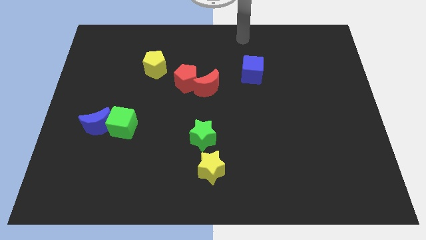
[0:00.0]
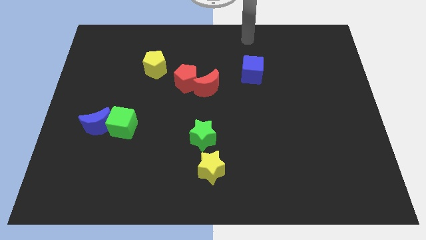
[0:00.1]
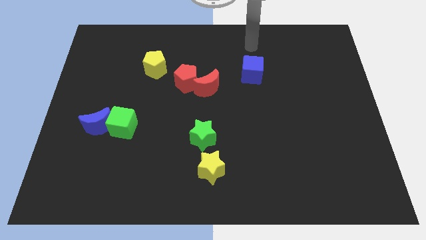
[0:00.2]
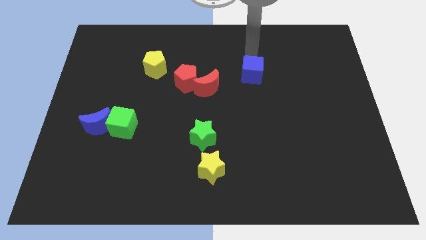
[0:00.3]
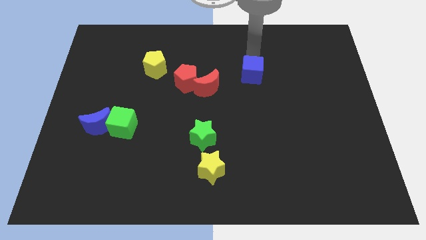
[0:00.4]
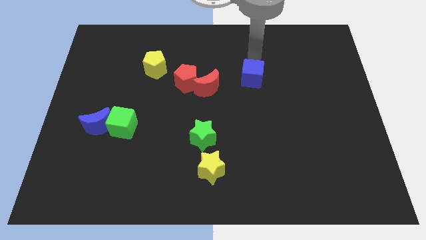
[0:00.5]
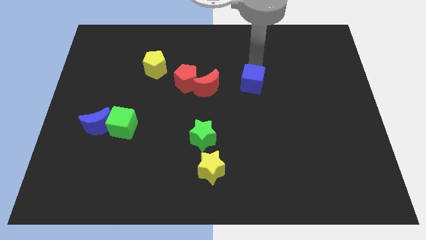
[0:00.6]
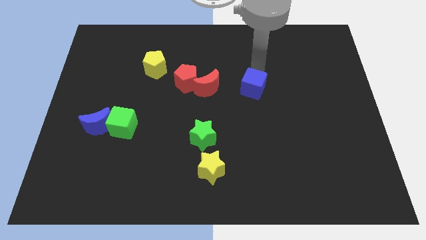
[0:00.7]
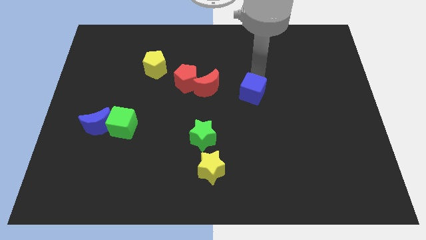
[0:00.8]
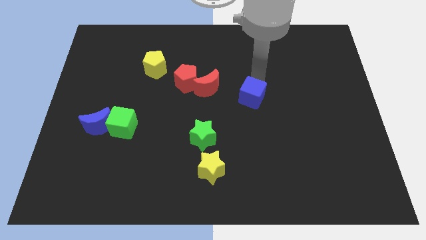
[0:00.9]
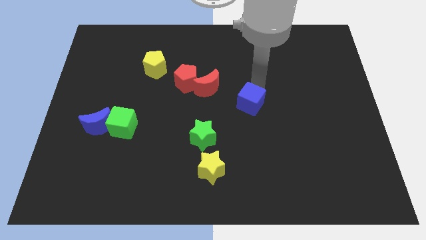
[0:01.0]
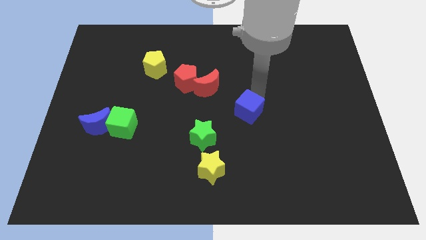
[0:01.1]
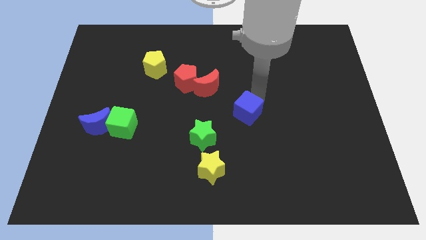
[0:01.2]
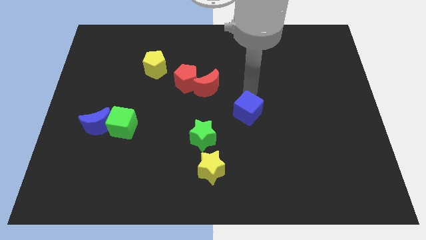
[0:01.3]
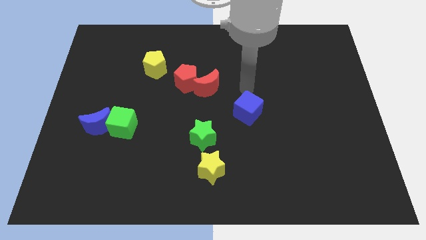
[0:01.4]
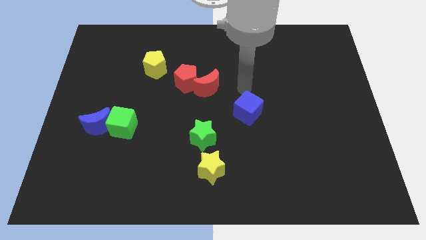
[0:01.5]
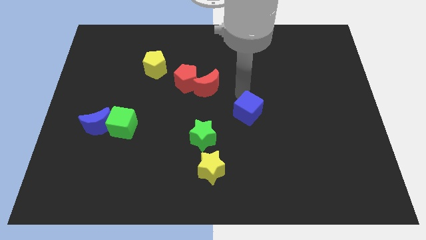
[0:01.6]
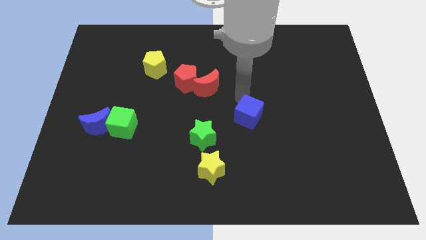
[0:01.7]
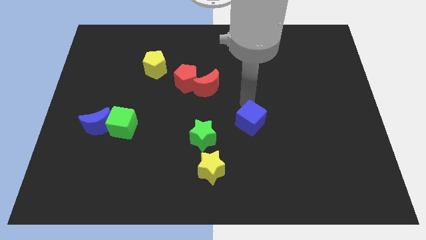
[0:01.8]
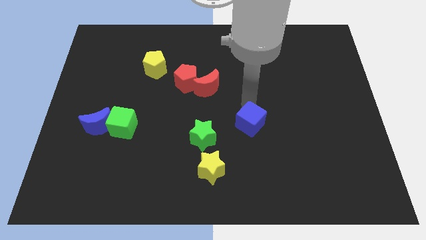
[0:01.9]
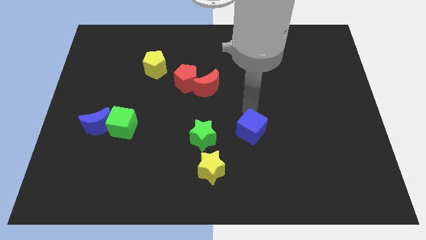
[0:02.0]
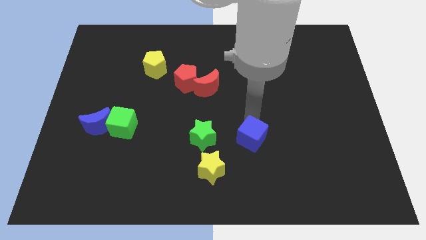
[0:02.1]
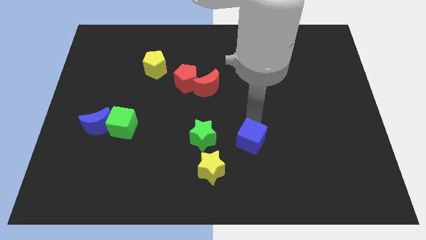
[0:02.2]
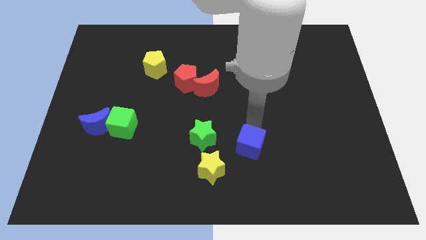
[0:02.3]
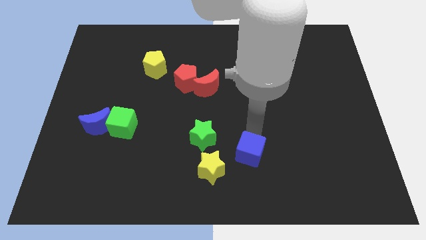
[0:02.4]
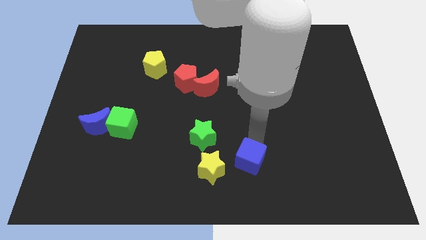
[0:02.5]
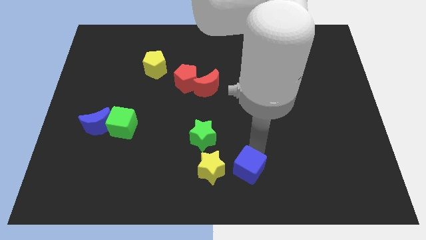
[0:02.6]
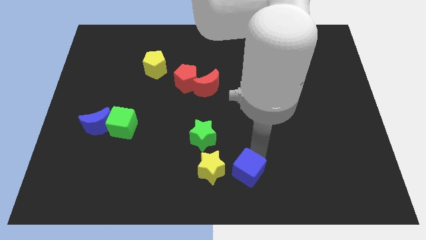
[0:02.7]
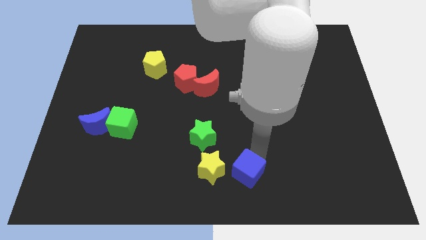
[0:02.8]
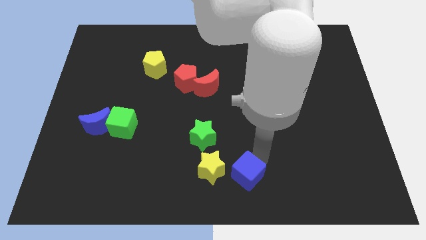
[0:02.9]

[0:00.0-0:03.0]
push blue cube adjacent to yellow star

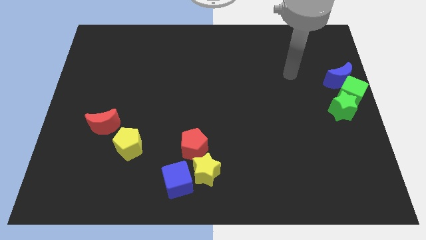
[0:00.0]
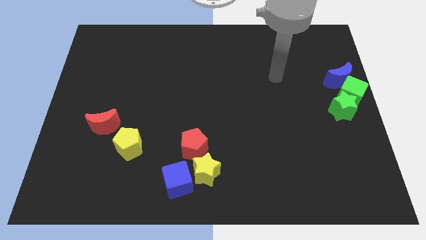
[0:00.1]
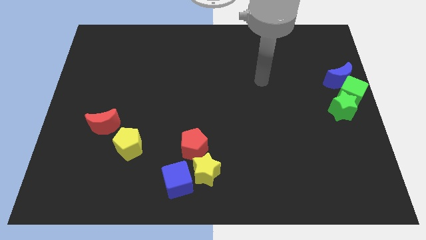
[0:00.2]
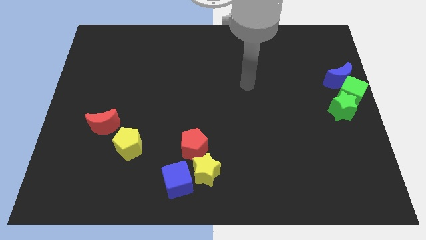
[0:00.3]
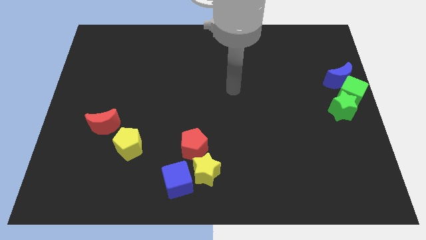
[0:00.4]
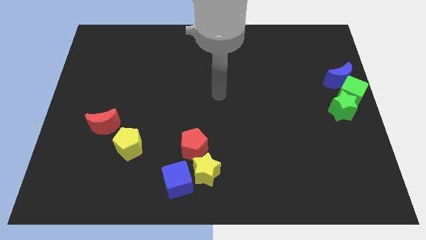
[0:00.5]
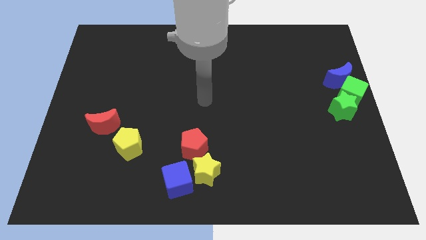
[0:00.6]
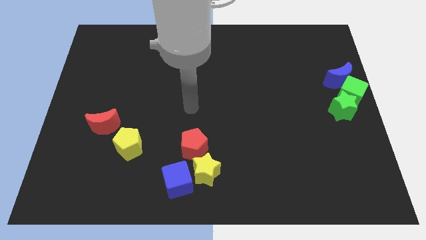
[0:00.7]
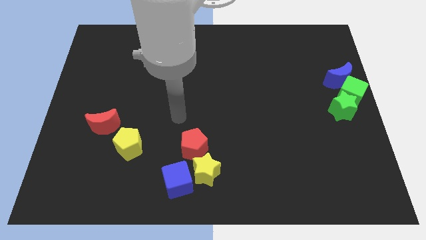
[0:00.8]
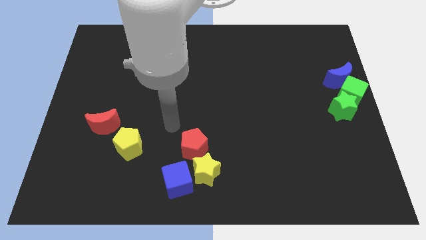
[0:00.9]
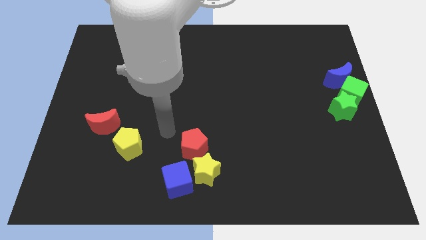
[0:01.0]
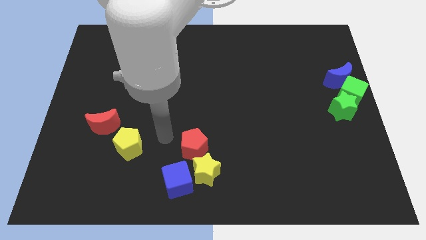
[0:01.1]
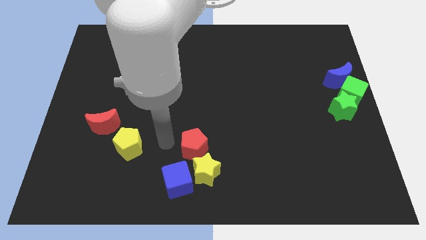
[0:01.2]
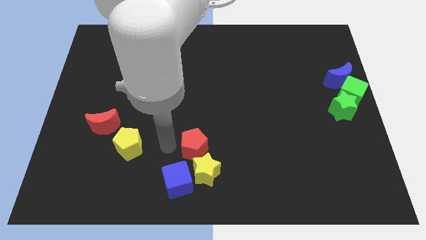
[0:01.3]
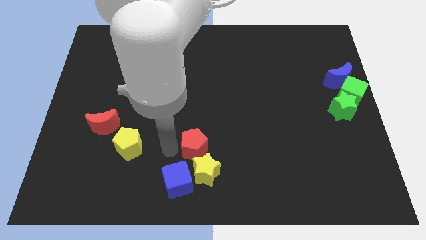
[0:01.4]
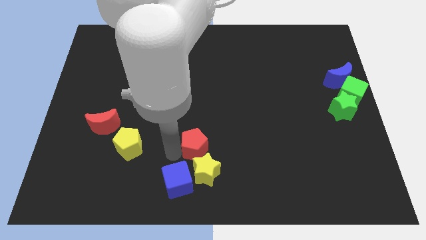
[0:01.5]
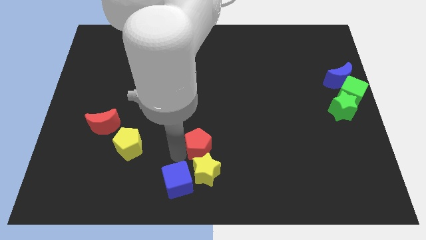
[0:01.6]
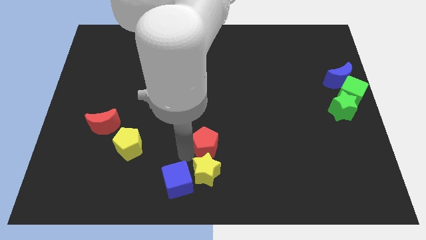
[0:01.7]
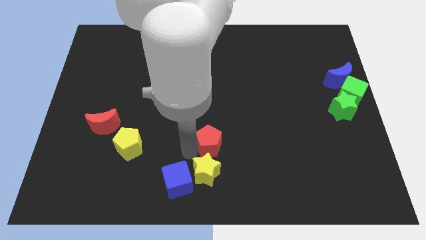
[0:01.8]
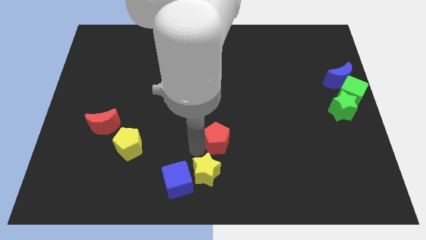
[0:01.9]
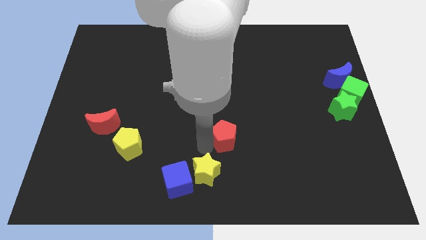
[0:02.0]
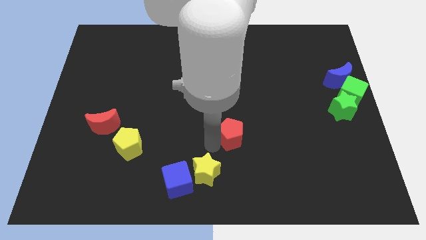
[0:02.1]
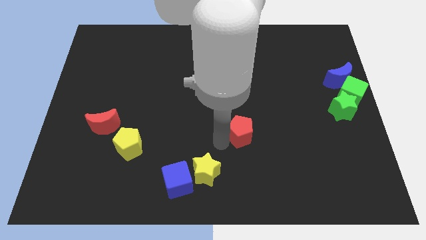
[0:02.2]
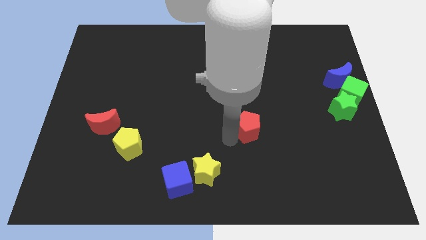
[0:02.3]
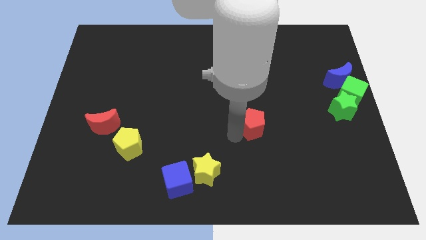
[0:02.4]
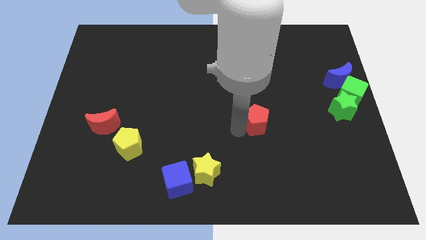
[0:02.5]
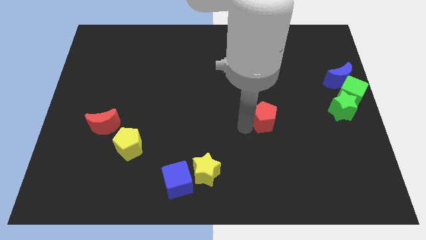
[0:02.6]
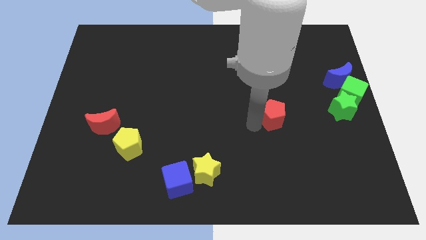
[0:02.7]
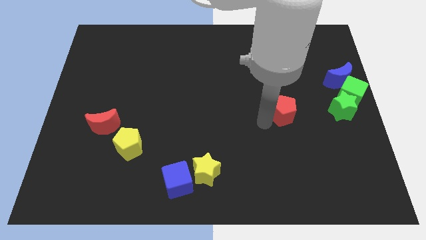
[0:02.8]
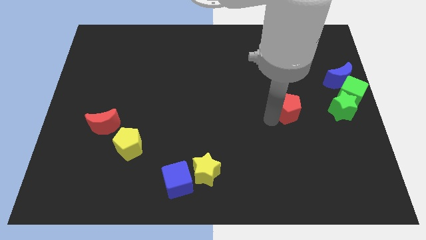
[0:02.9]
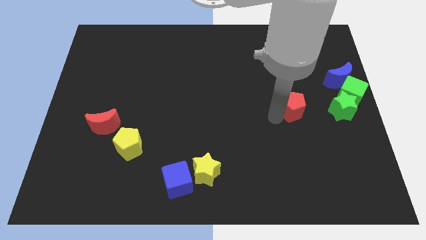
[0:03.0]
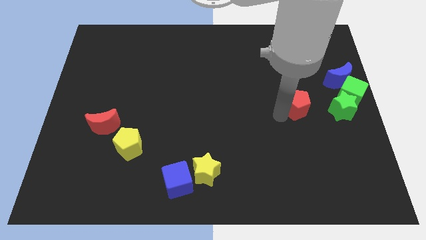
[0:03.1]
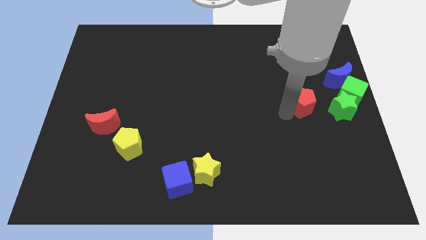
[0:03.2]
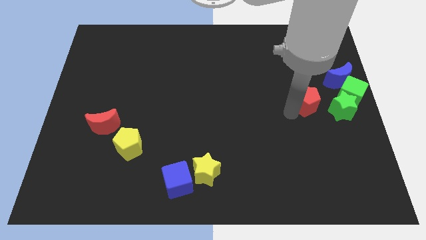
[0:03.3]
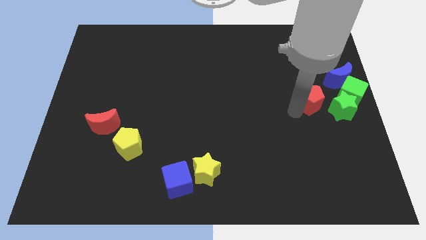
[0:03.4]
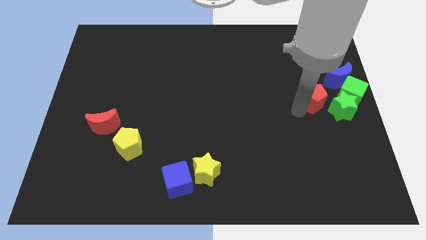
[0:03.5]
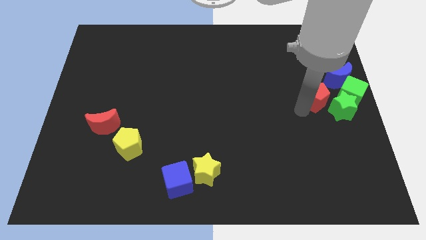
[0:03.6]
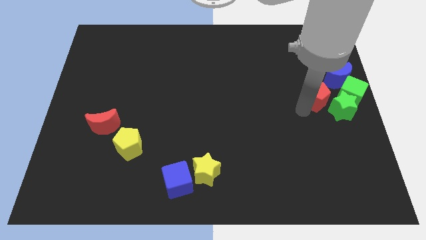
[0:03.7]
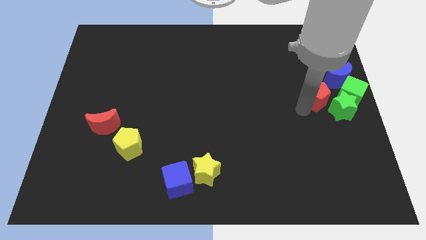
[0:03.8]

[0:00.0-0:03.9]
move the red pentagon parallel to the green cube

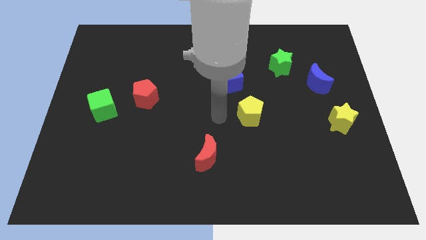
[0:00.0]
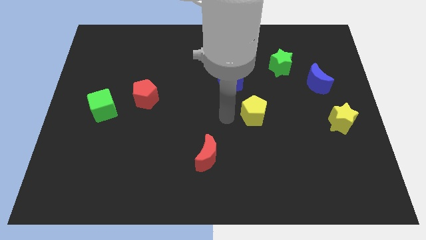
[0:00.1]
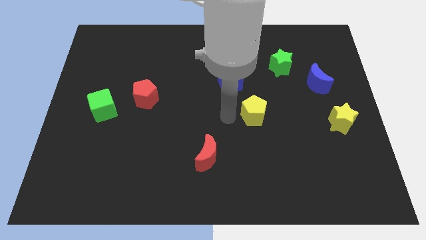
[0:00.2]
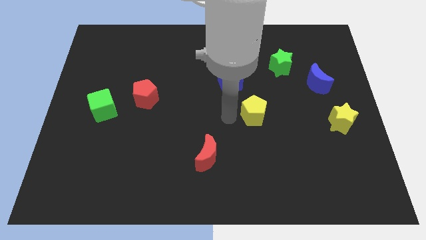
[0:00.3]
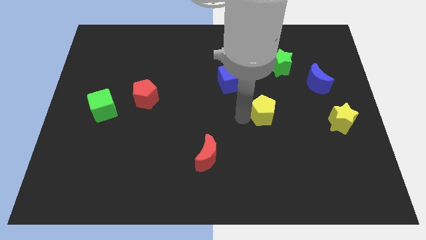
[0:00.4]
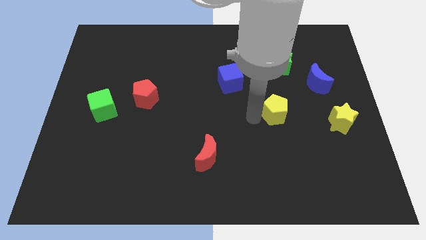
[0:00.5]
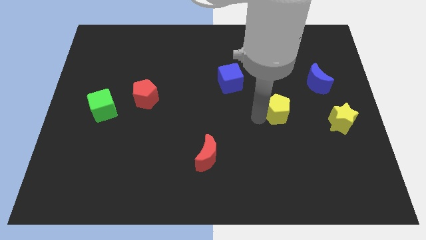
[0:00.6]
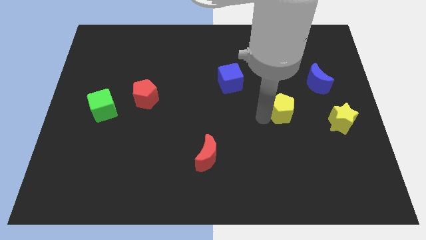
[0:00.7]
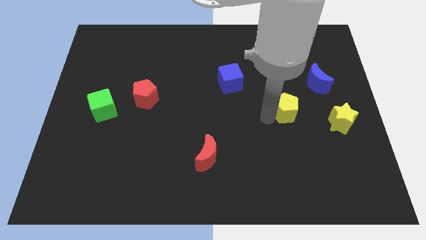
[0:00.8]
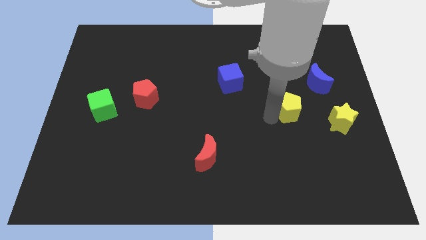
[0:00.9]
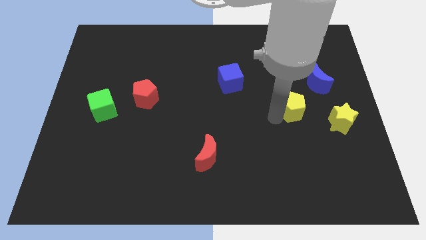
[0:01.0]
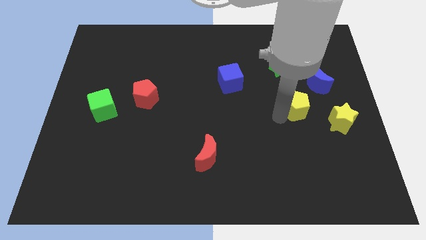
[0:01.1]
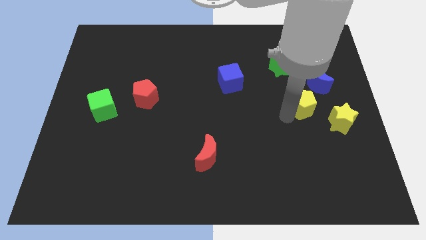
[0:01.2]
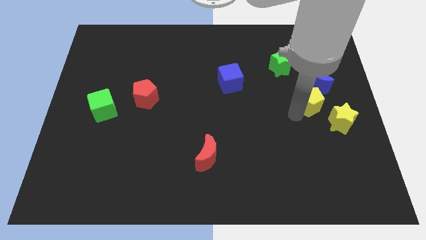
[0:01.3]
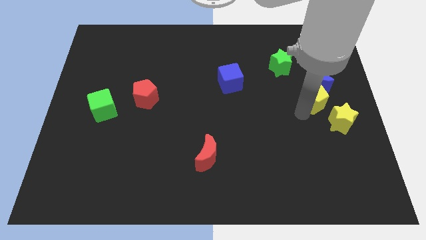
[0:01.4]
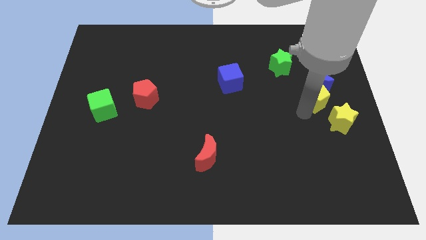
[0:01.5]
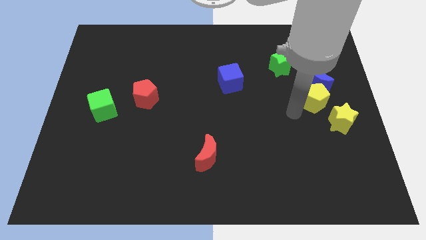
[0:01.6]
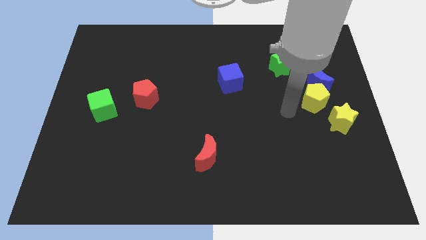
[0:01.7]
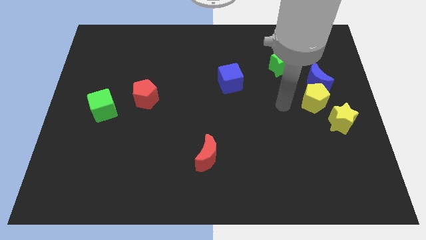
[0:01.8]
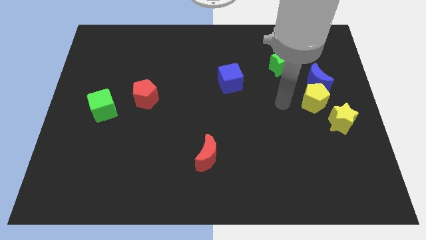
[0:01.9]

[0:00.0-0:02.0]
push the yellow pentagon into the blue crescent

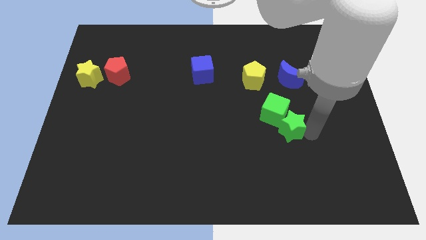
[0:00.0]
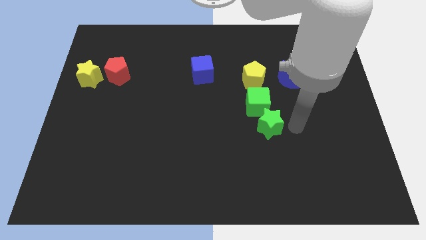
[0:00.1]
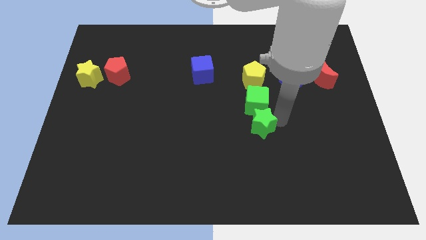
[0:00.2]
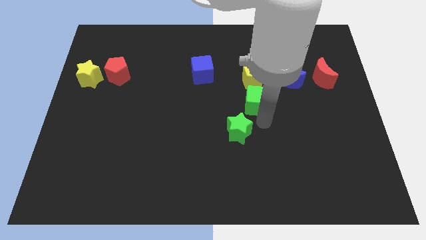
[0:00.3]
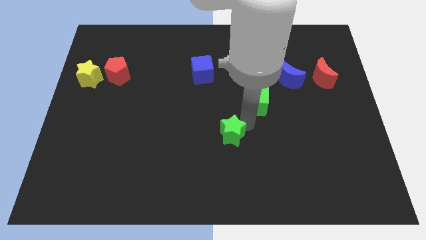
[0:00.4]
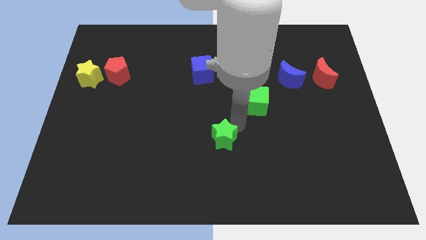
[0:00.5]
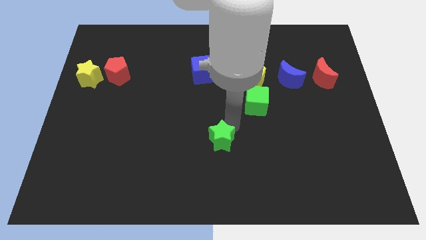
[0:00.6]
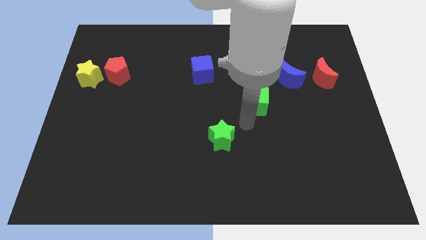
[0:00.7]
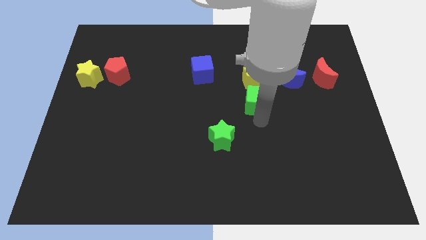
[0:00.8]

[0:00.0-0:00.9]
push the green star away from the green cube
